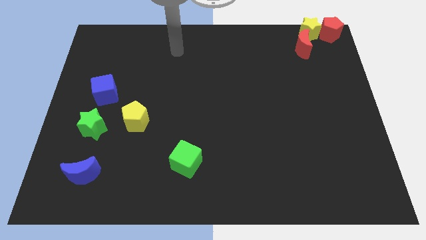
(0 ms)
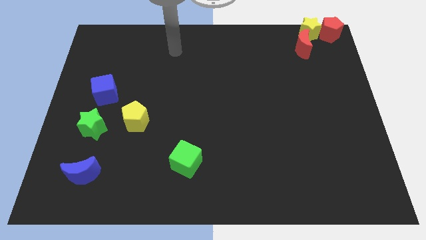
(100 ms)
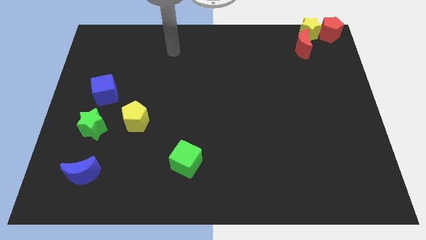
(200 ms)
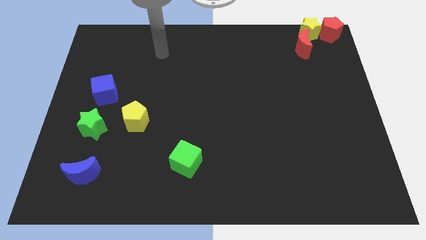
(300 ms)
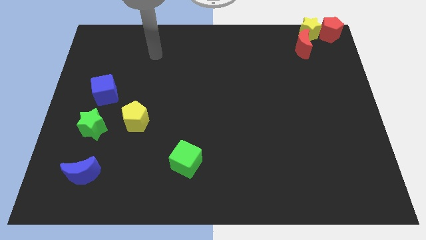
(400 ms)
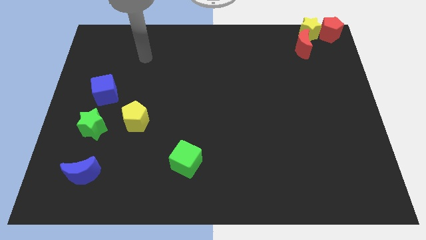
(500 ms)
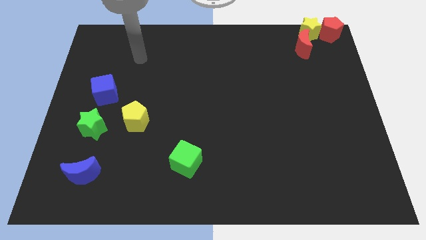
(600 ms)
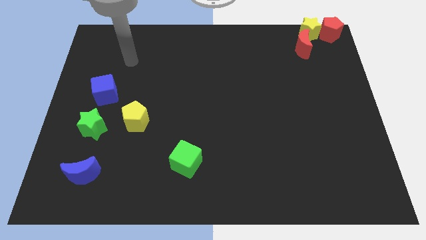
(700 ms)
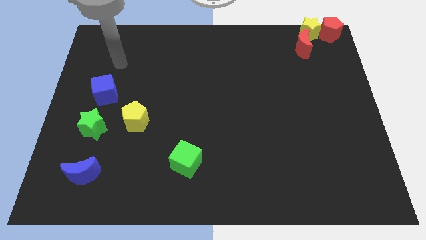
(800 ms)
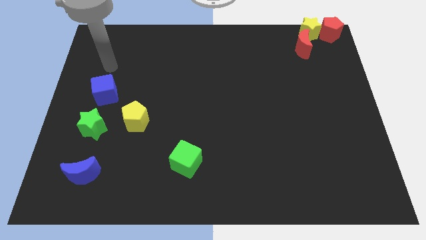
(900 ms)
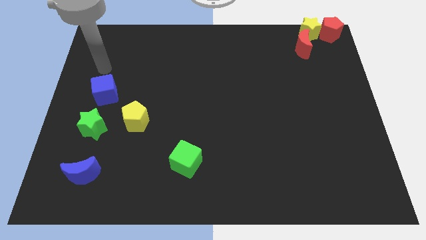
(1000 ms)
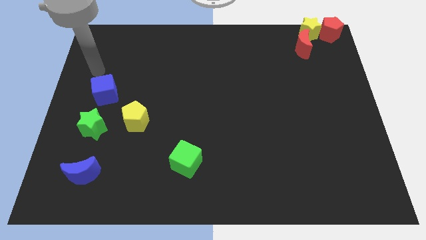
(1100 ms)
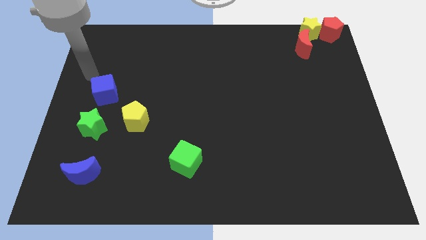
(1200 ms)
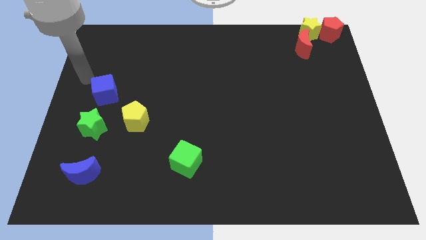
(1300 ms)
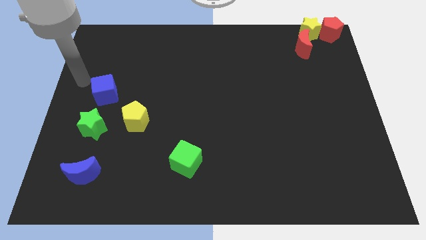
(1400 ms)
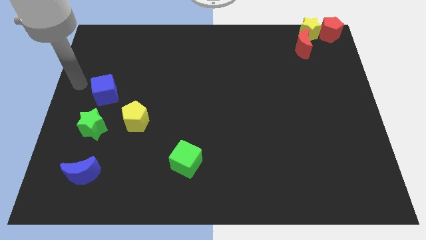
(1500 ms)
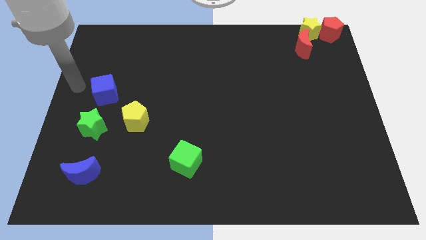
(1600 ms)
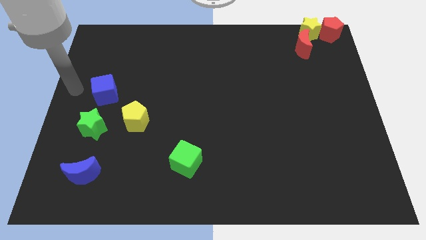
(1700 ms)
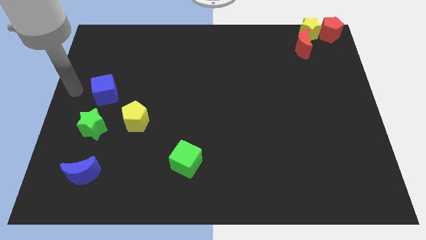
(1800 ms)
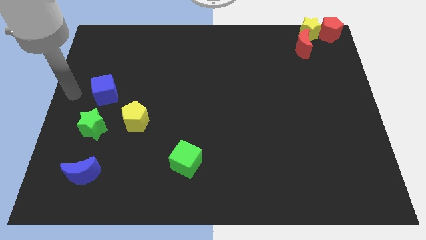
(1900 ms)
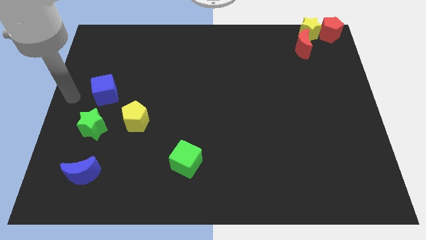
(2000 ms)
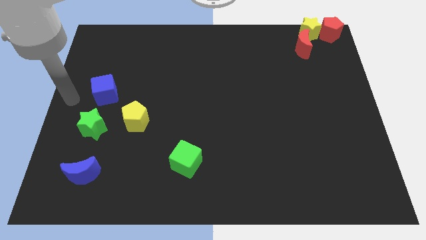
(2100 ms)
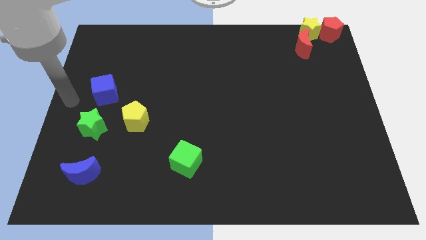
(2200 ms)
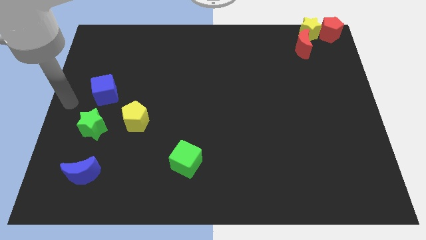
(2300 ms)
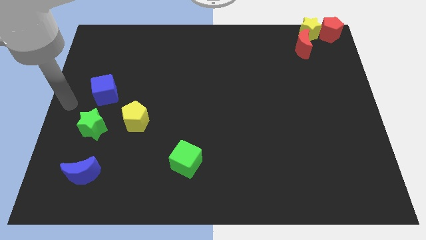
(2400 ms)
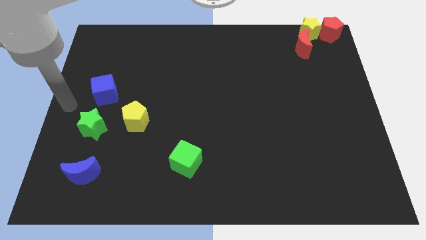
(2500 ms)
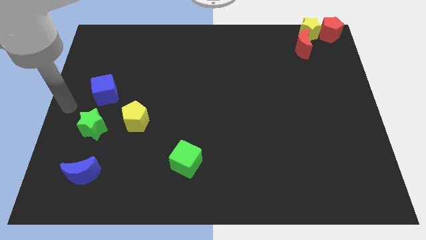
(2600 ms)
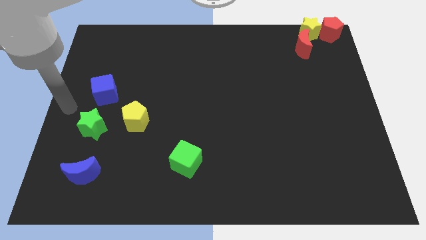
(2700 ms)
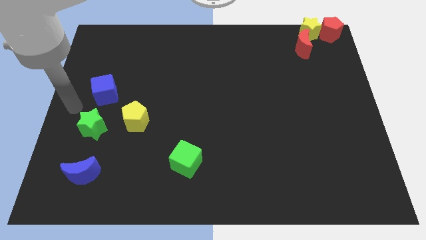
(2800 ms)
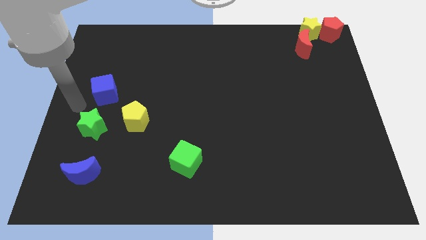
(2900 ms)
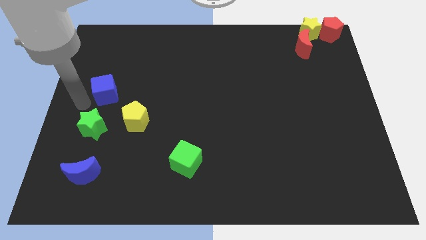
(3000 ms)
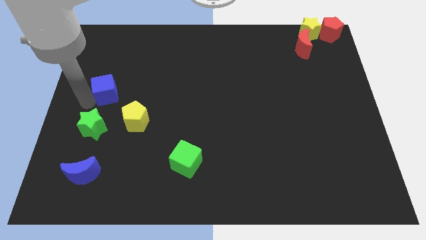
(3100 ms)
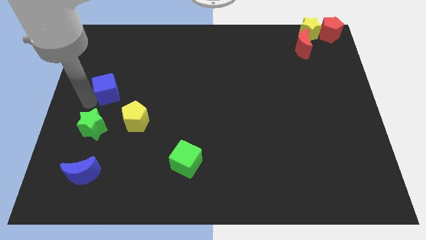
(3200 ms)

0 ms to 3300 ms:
place the arm left to the blue cube

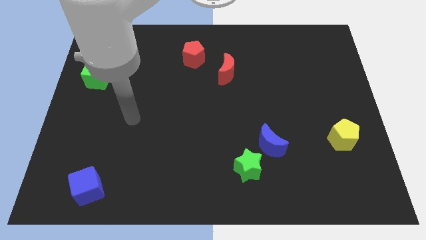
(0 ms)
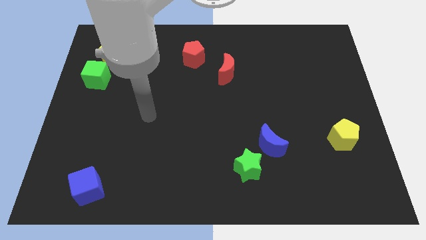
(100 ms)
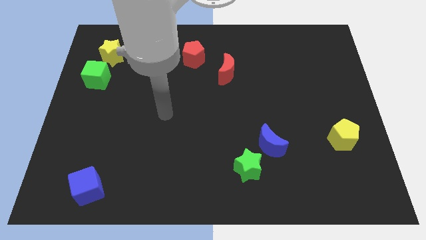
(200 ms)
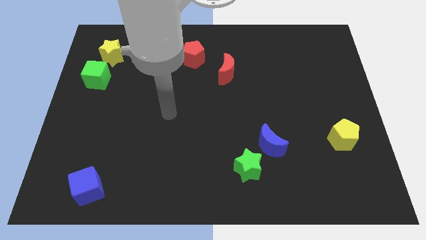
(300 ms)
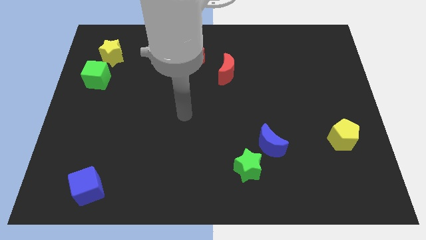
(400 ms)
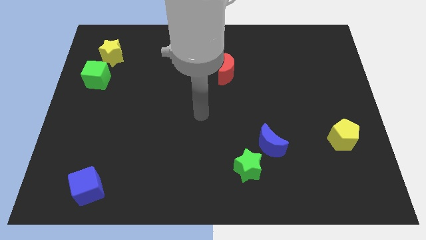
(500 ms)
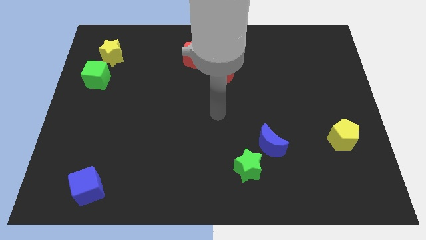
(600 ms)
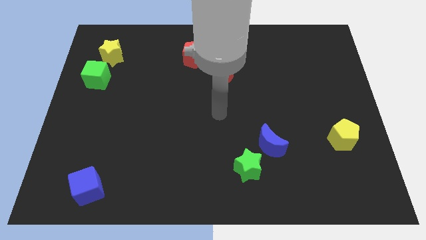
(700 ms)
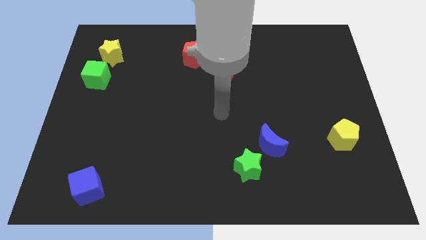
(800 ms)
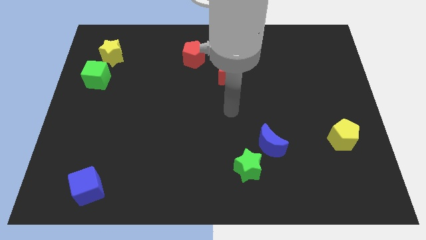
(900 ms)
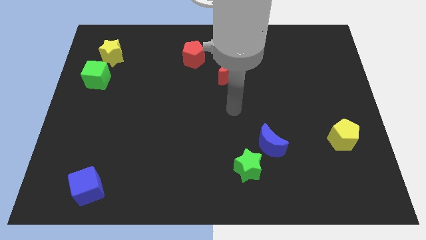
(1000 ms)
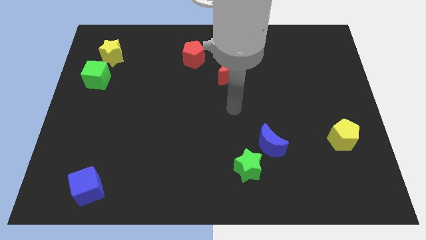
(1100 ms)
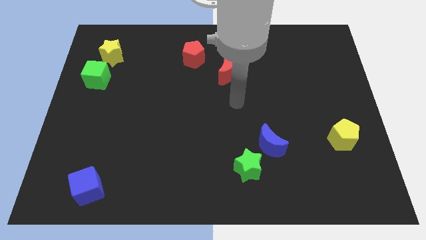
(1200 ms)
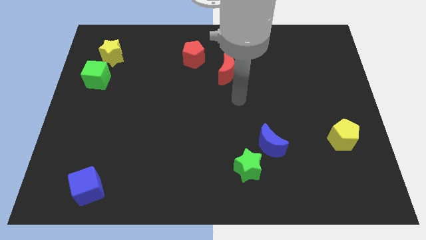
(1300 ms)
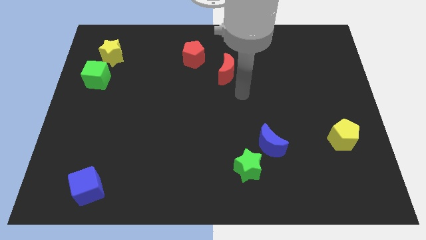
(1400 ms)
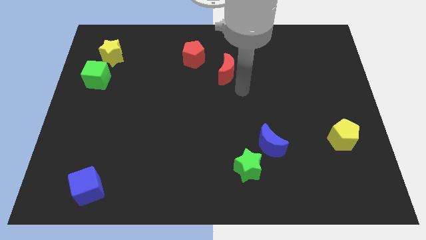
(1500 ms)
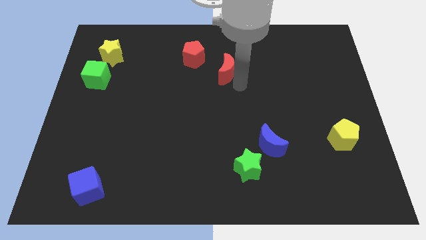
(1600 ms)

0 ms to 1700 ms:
move your arm towards the red crescent

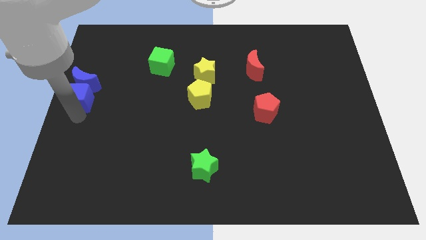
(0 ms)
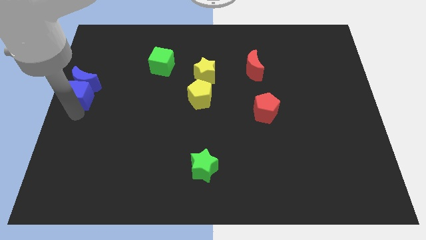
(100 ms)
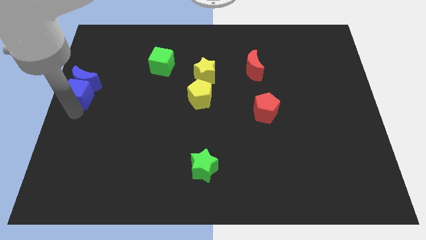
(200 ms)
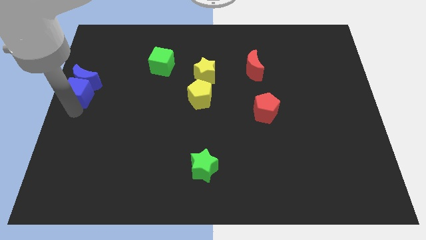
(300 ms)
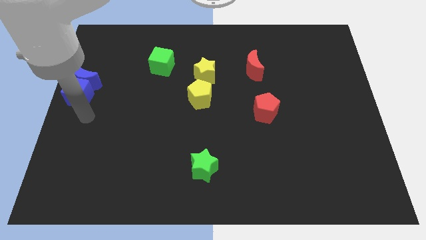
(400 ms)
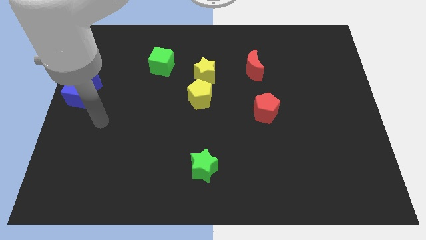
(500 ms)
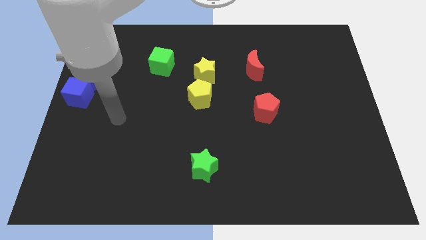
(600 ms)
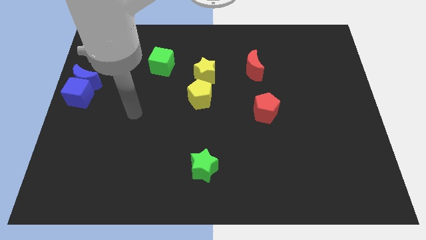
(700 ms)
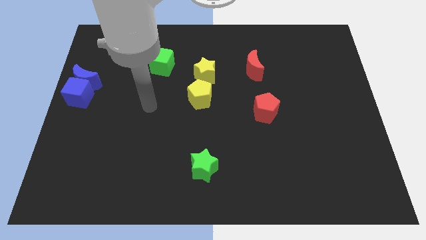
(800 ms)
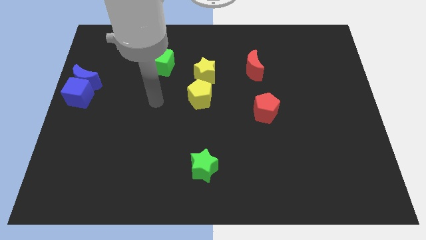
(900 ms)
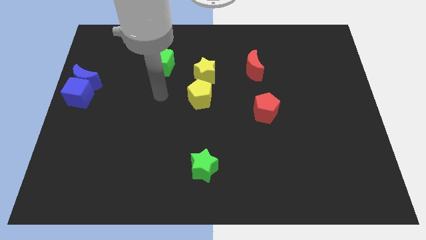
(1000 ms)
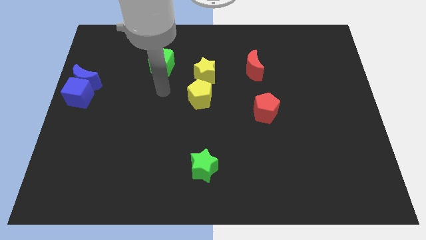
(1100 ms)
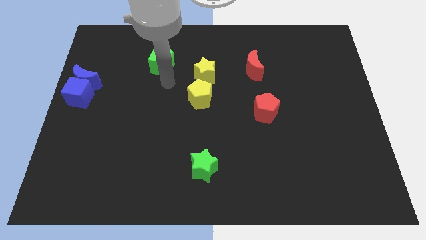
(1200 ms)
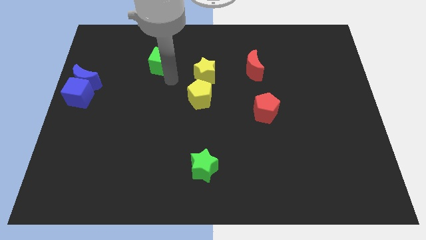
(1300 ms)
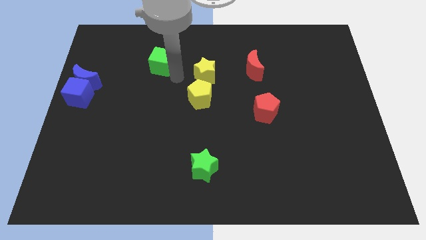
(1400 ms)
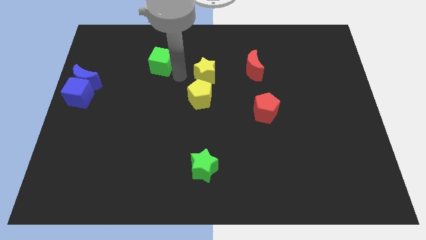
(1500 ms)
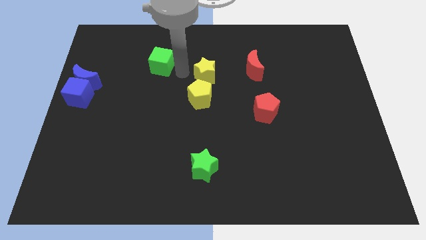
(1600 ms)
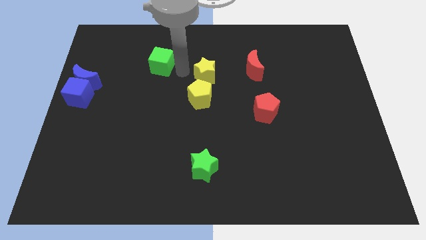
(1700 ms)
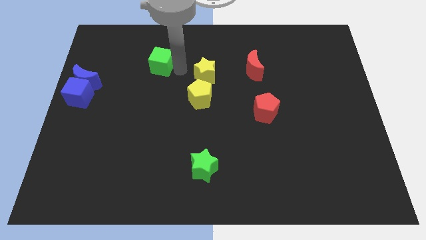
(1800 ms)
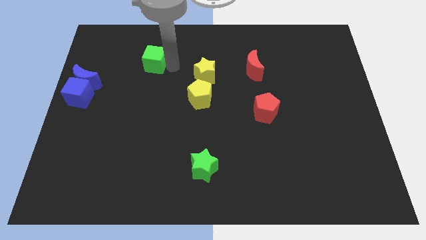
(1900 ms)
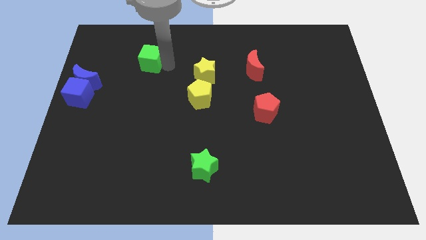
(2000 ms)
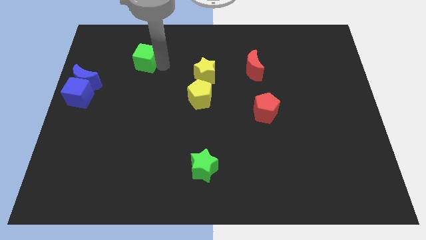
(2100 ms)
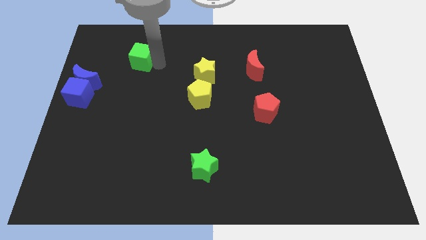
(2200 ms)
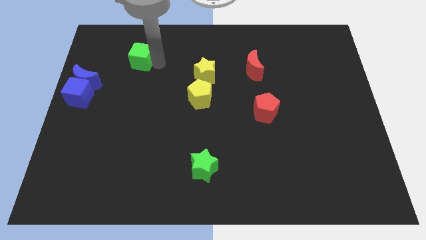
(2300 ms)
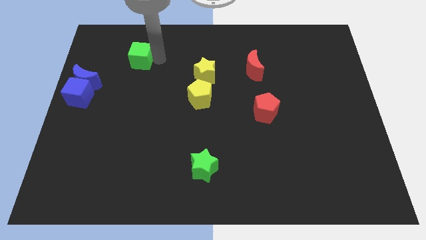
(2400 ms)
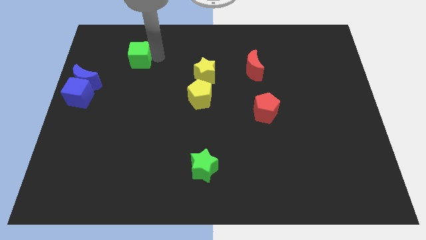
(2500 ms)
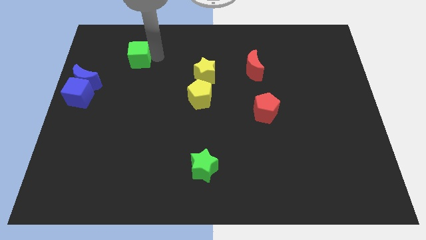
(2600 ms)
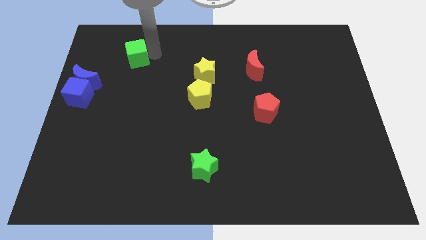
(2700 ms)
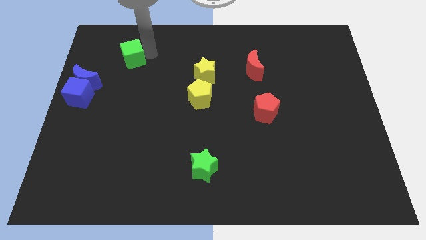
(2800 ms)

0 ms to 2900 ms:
place the green cube diagonal to the blue moon

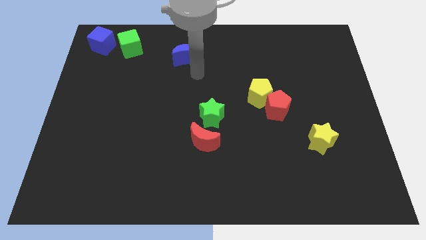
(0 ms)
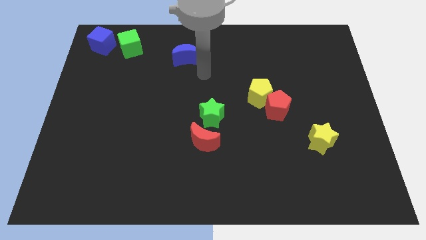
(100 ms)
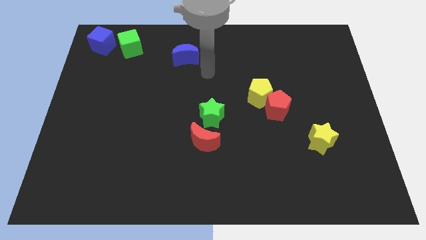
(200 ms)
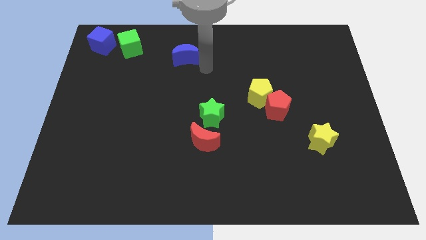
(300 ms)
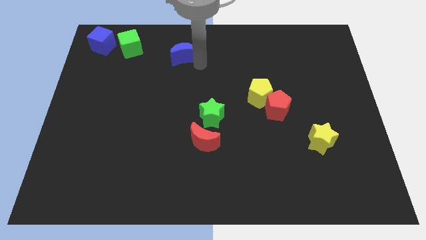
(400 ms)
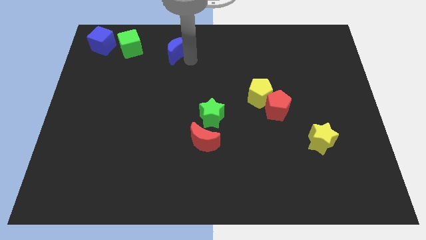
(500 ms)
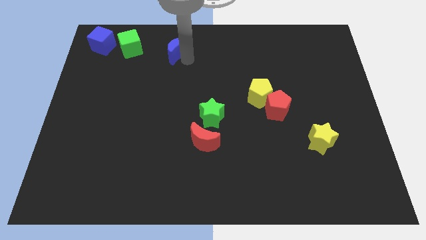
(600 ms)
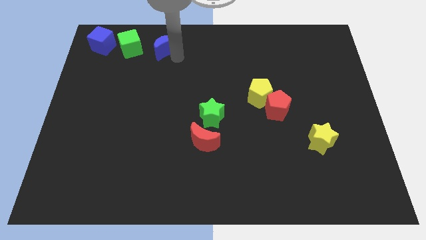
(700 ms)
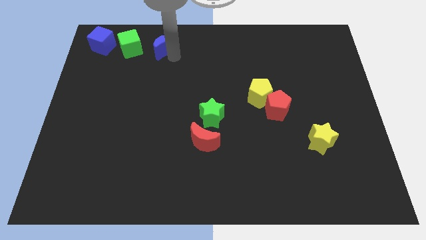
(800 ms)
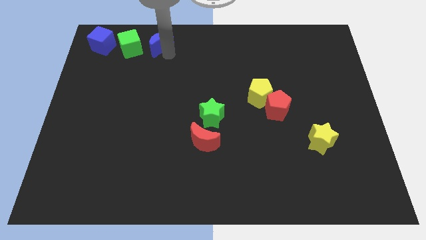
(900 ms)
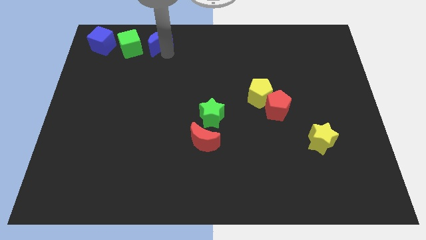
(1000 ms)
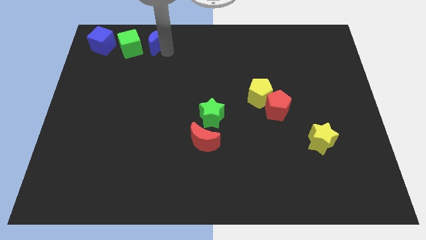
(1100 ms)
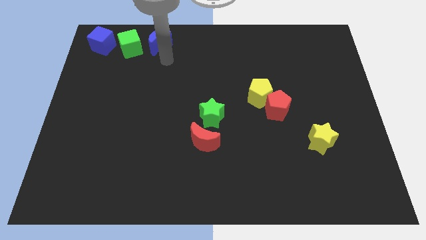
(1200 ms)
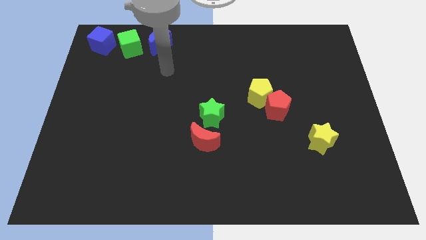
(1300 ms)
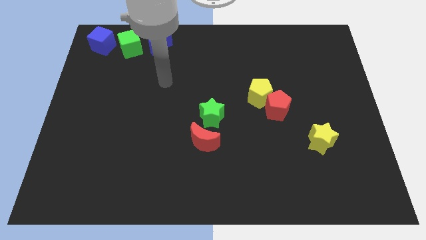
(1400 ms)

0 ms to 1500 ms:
put the blue crescent to the right side of green cube
